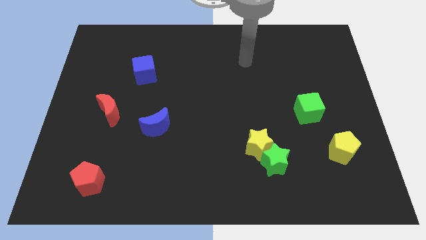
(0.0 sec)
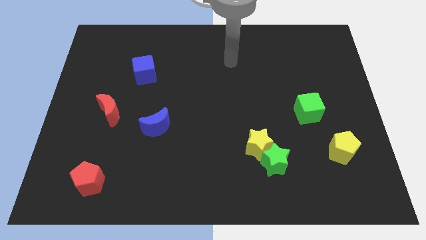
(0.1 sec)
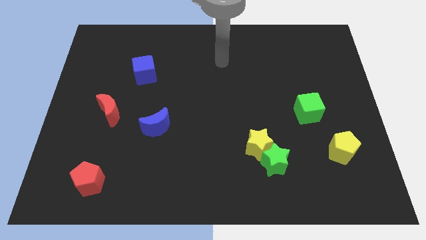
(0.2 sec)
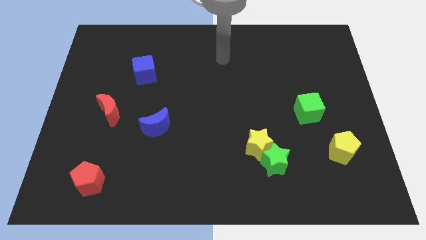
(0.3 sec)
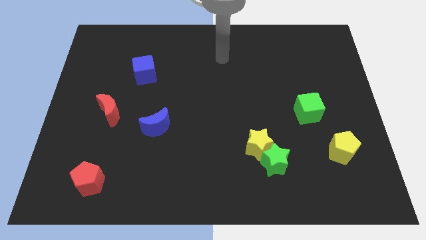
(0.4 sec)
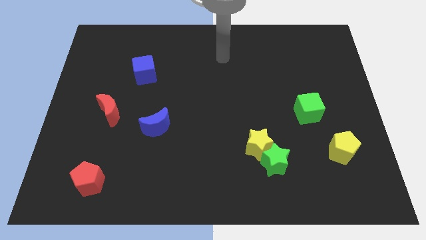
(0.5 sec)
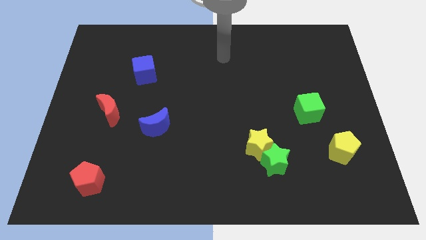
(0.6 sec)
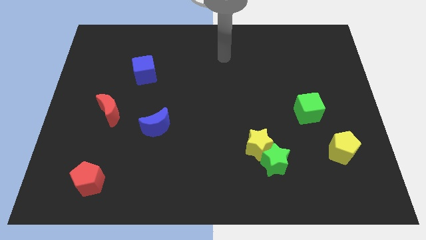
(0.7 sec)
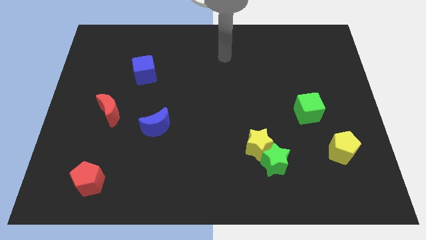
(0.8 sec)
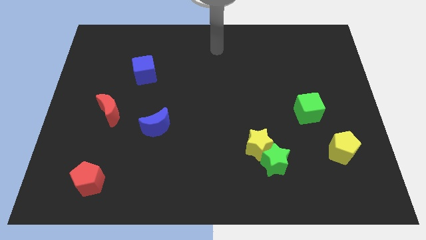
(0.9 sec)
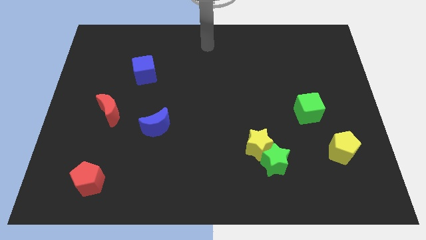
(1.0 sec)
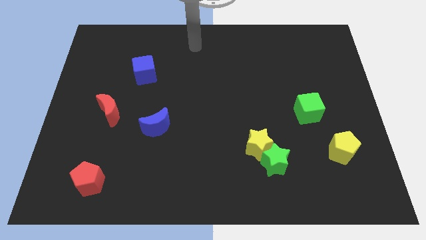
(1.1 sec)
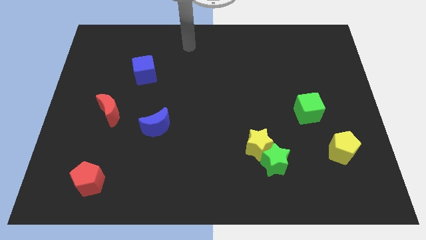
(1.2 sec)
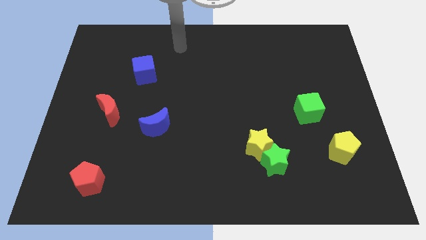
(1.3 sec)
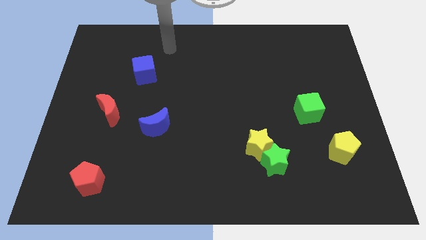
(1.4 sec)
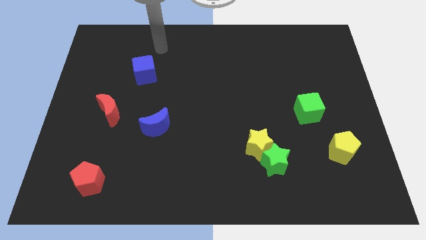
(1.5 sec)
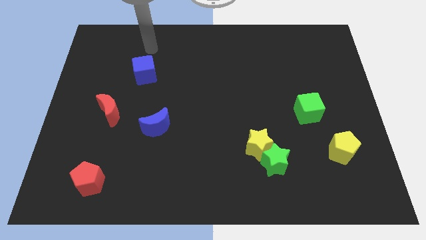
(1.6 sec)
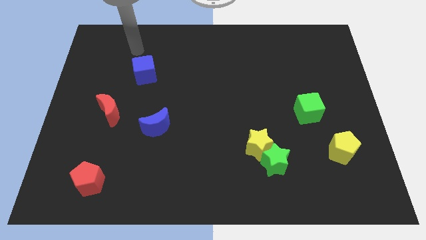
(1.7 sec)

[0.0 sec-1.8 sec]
place your arm on top of blue cube

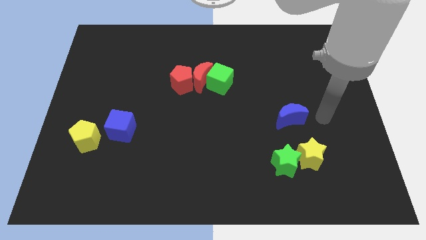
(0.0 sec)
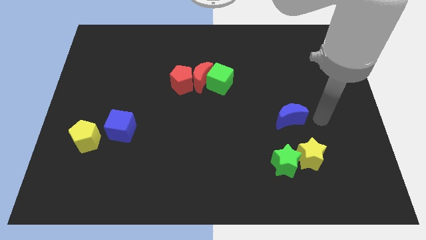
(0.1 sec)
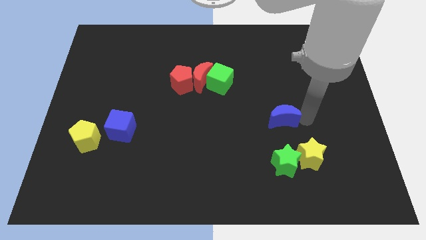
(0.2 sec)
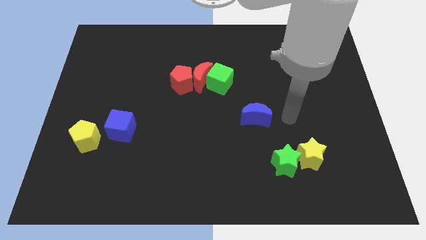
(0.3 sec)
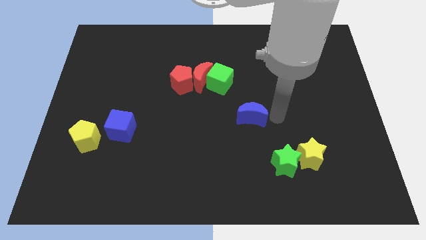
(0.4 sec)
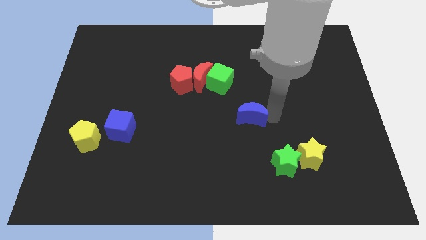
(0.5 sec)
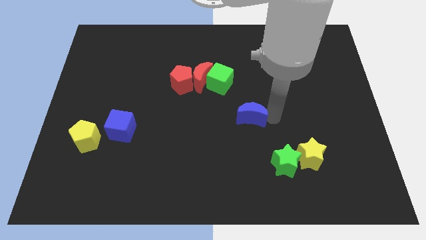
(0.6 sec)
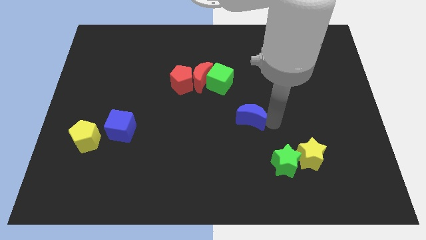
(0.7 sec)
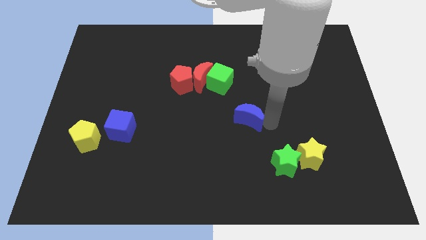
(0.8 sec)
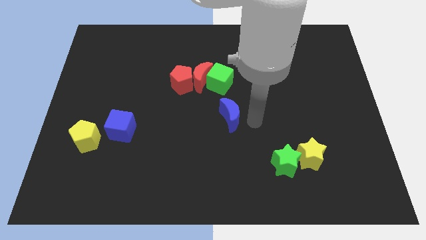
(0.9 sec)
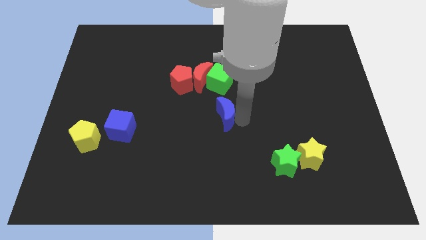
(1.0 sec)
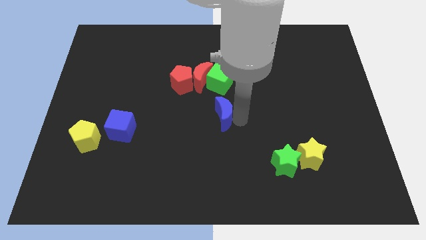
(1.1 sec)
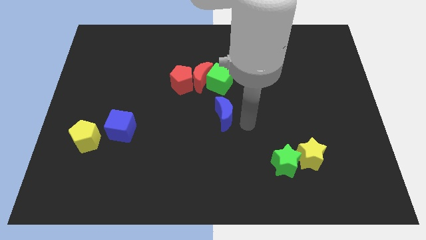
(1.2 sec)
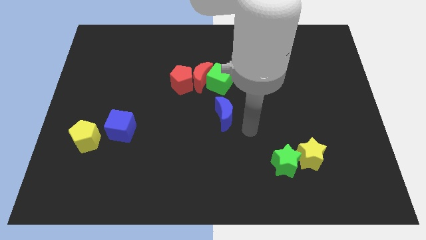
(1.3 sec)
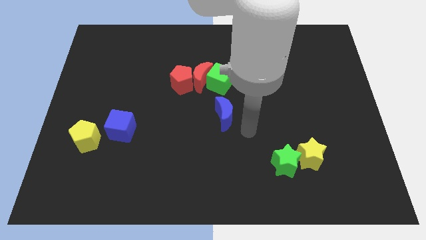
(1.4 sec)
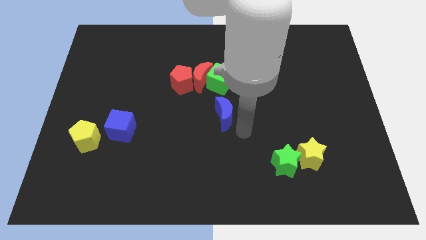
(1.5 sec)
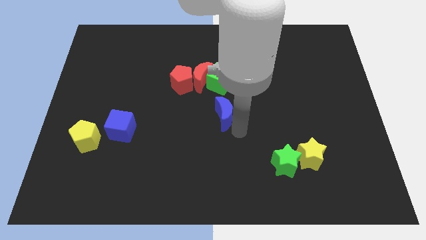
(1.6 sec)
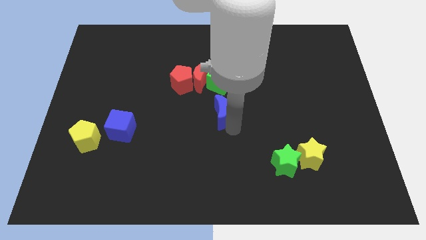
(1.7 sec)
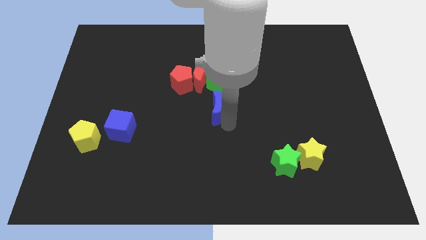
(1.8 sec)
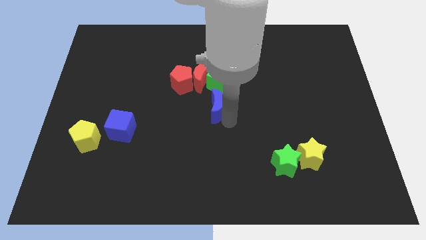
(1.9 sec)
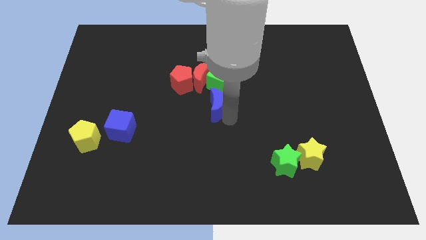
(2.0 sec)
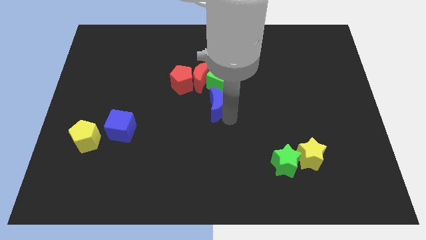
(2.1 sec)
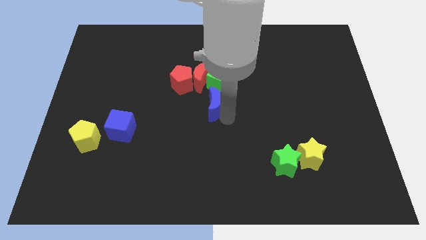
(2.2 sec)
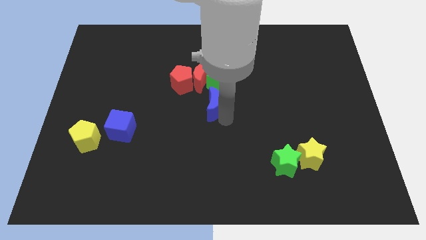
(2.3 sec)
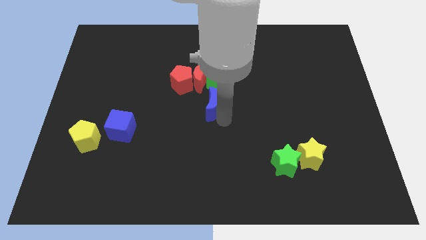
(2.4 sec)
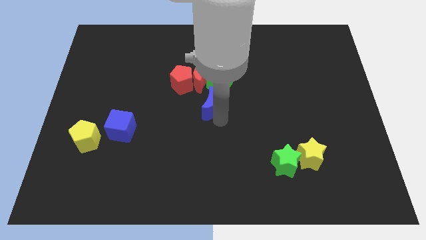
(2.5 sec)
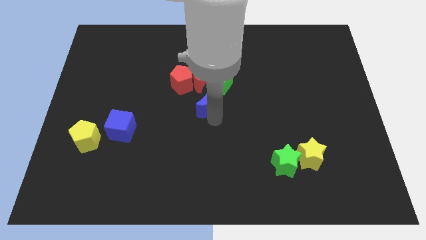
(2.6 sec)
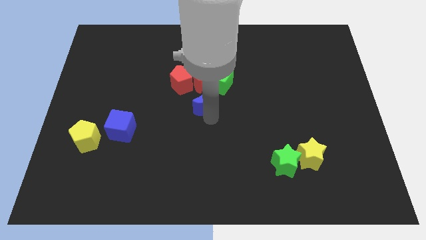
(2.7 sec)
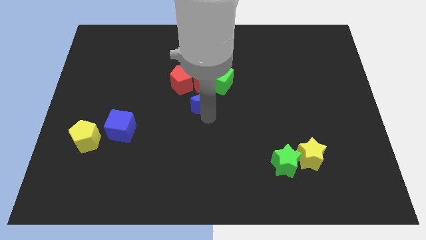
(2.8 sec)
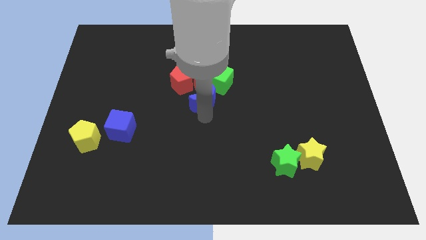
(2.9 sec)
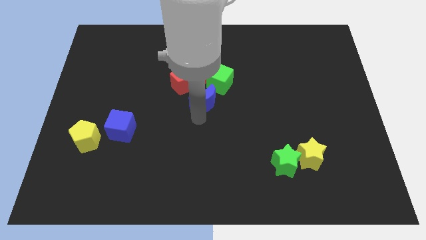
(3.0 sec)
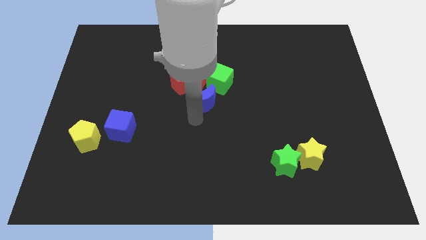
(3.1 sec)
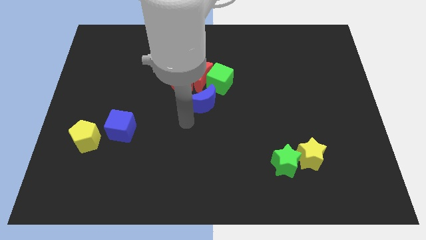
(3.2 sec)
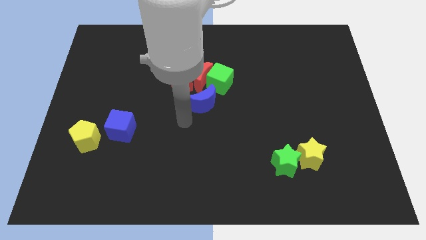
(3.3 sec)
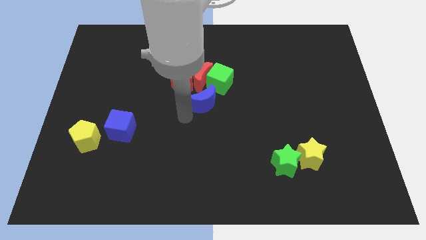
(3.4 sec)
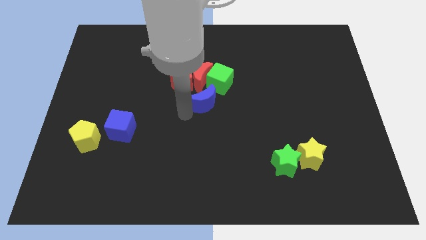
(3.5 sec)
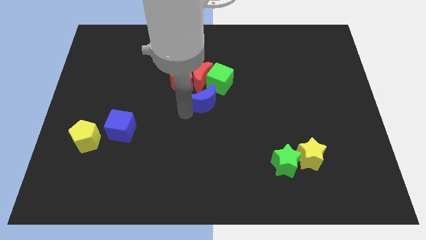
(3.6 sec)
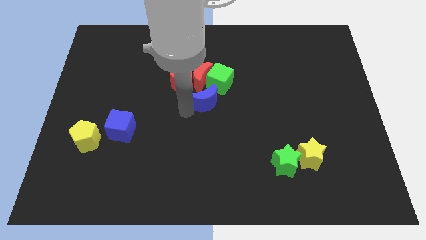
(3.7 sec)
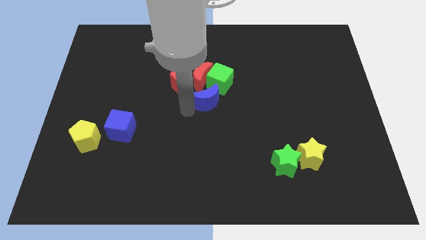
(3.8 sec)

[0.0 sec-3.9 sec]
place blue moon to center of the board

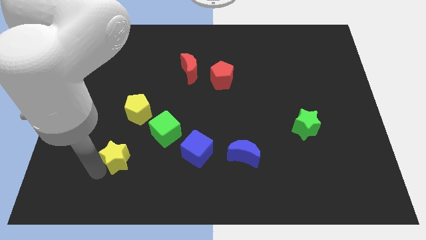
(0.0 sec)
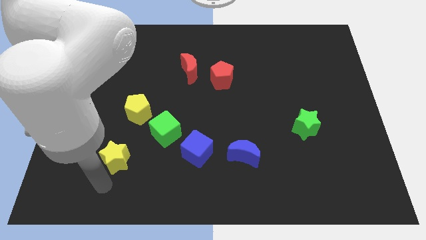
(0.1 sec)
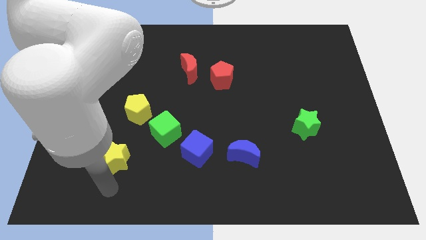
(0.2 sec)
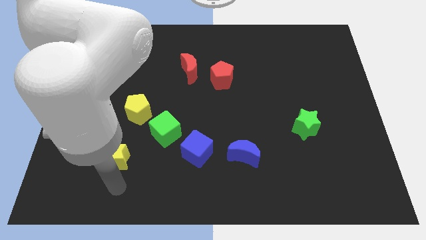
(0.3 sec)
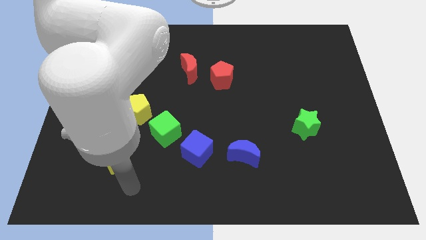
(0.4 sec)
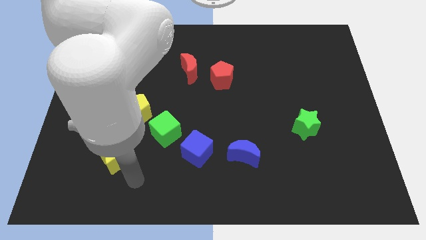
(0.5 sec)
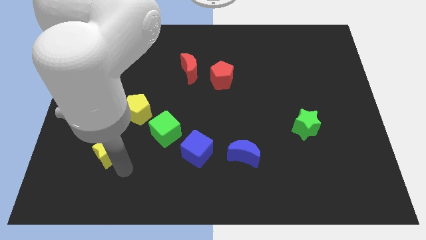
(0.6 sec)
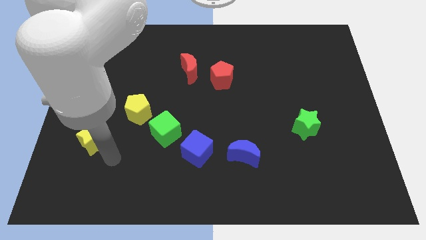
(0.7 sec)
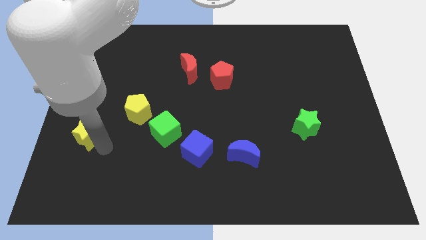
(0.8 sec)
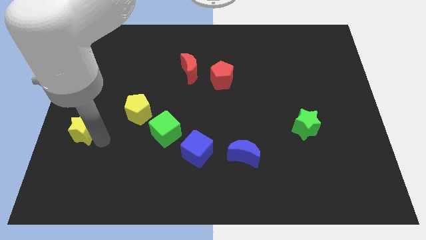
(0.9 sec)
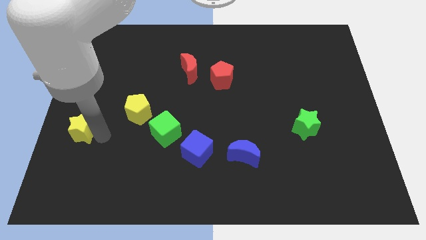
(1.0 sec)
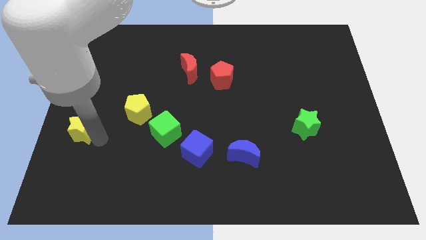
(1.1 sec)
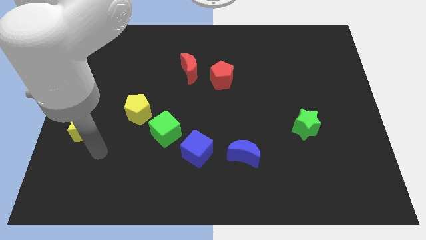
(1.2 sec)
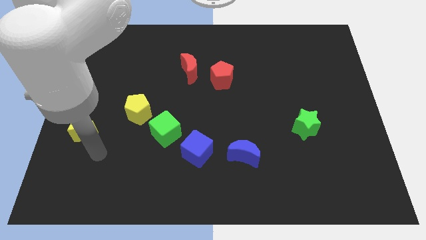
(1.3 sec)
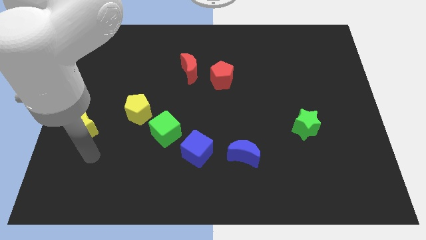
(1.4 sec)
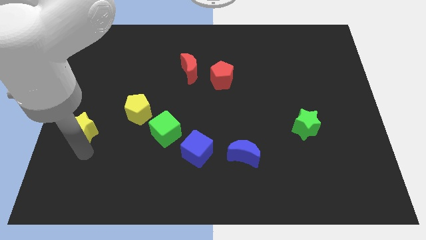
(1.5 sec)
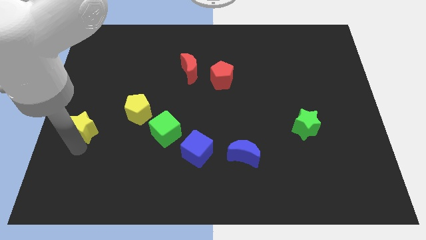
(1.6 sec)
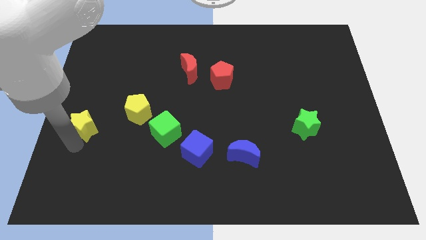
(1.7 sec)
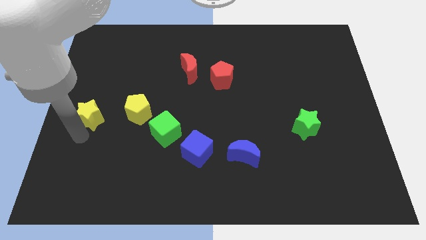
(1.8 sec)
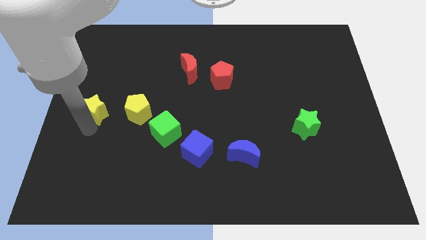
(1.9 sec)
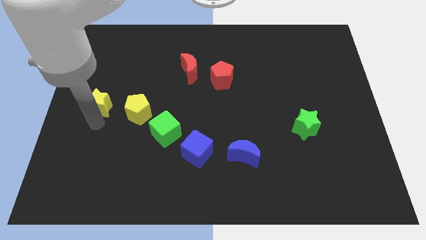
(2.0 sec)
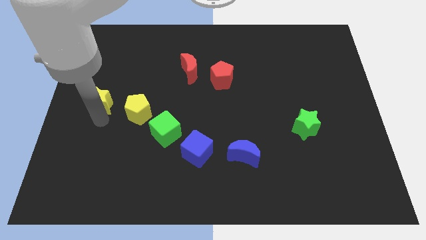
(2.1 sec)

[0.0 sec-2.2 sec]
place yellow star to the left of yellow pentagon

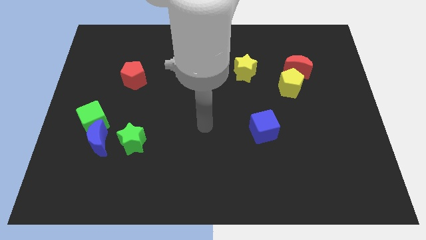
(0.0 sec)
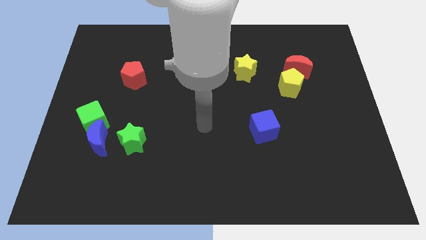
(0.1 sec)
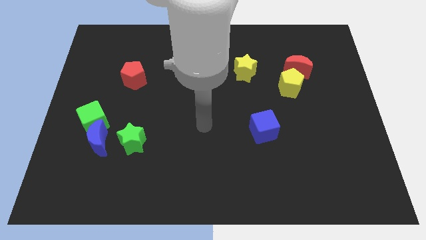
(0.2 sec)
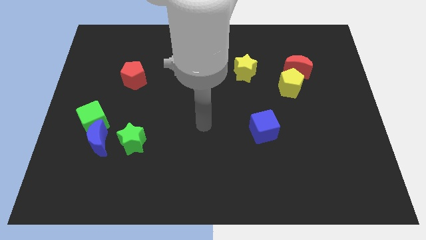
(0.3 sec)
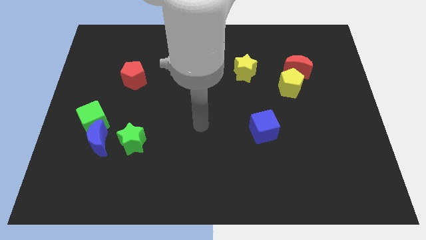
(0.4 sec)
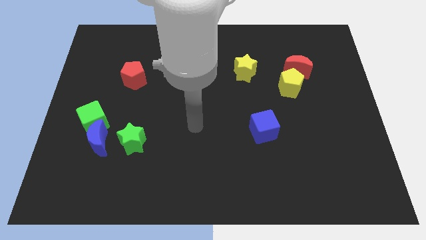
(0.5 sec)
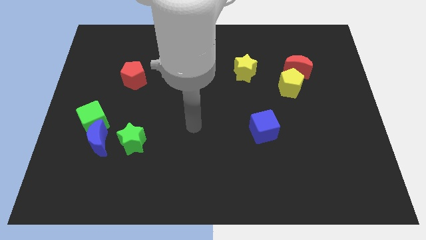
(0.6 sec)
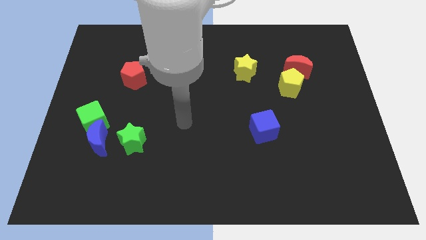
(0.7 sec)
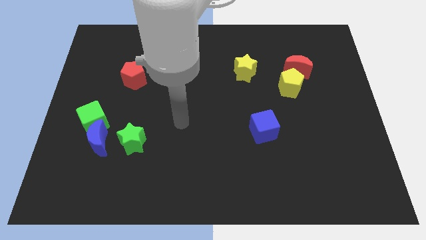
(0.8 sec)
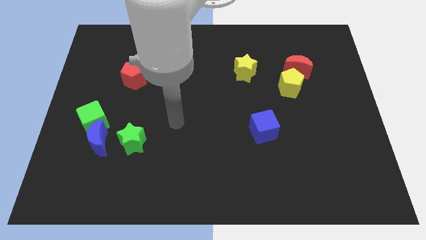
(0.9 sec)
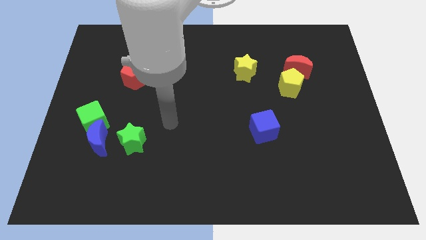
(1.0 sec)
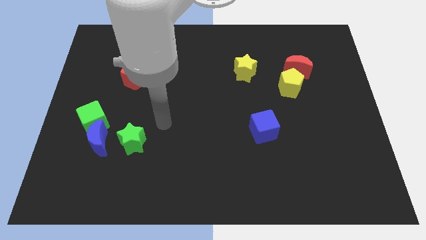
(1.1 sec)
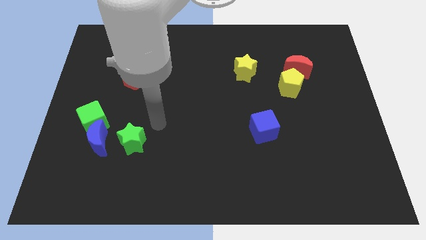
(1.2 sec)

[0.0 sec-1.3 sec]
put your arm to the right of the green star
